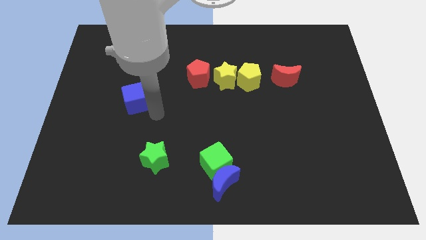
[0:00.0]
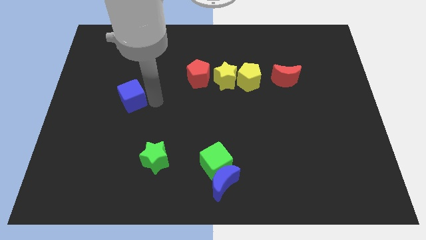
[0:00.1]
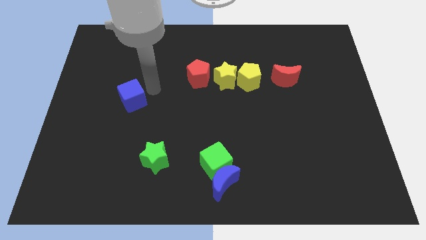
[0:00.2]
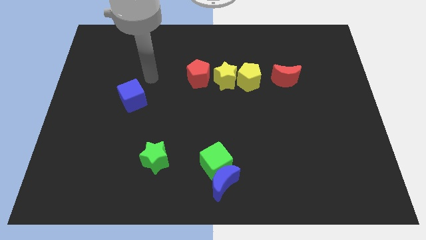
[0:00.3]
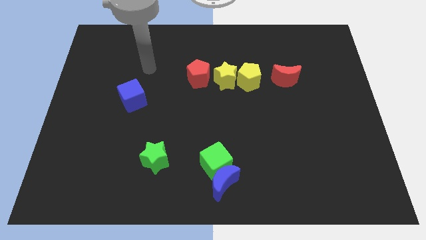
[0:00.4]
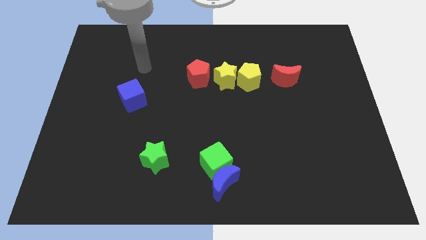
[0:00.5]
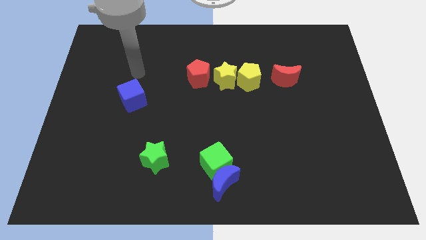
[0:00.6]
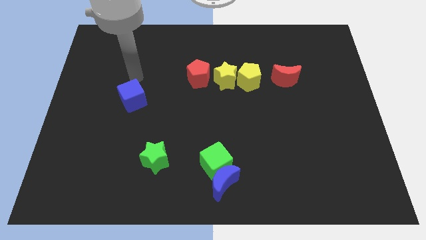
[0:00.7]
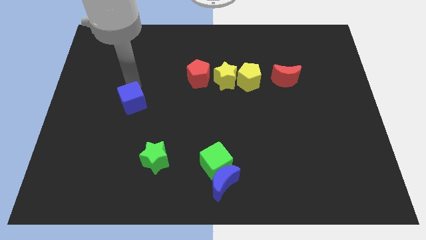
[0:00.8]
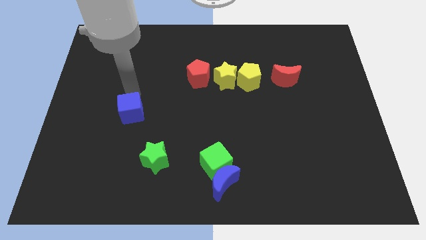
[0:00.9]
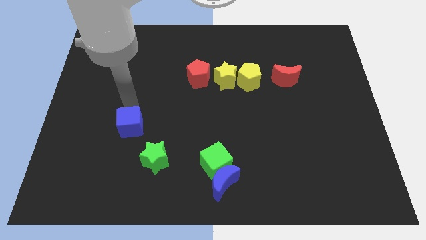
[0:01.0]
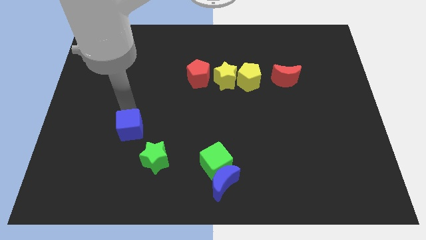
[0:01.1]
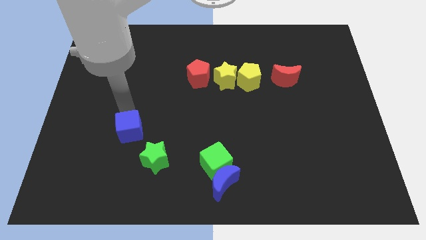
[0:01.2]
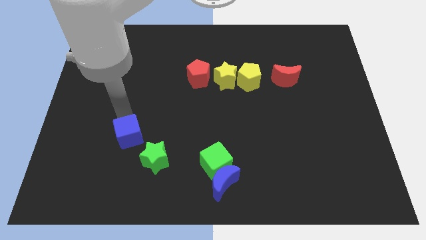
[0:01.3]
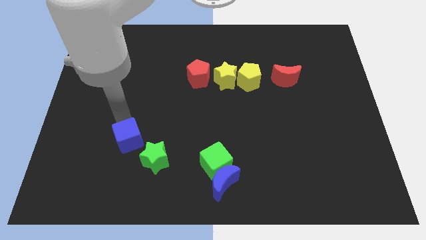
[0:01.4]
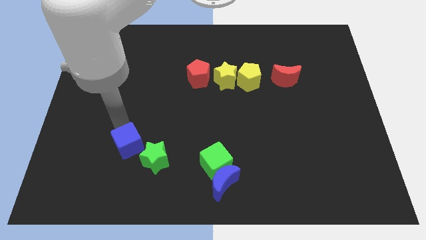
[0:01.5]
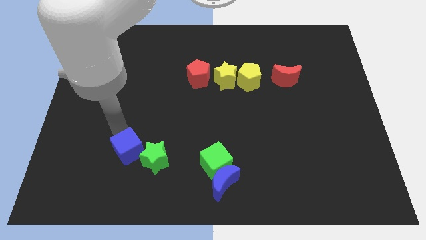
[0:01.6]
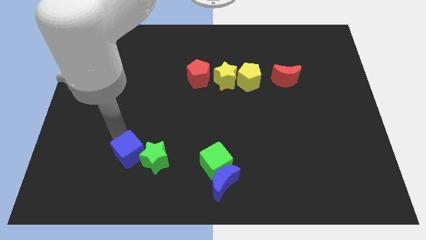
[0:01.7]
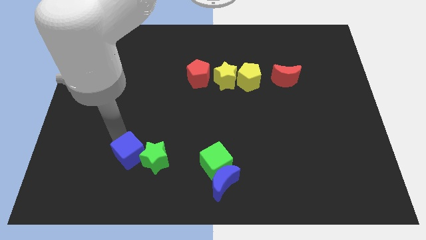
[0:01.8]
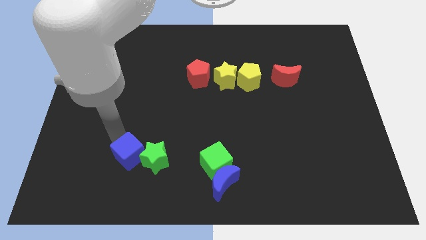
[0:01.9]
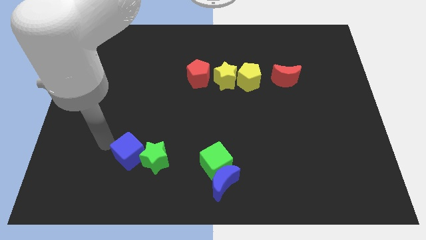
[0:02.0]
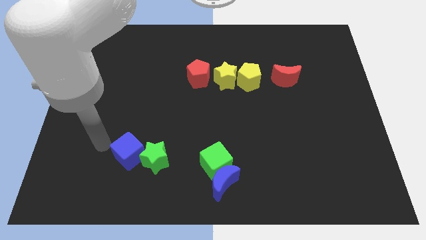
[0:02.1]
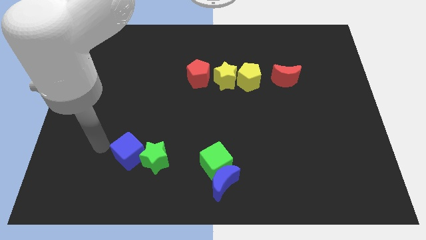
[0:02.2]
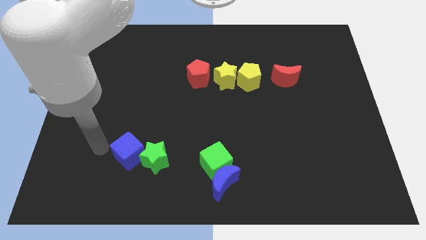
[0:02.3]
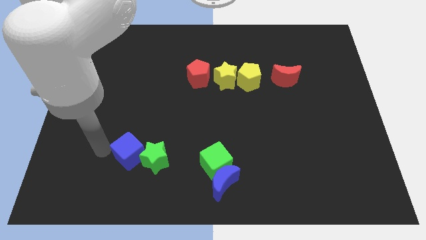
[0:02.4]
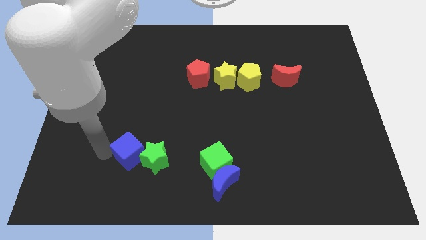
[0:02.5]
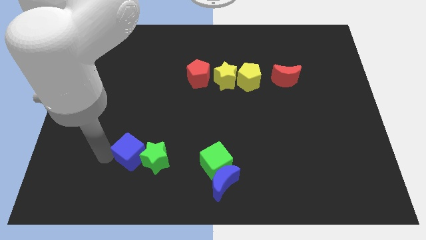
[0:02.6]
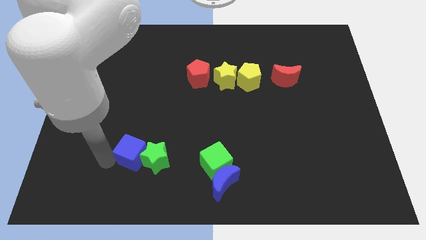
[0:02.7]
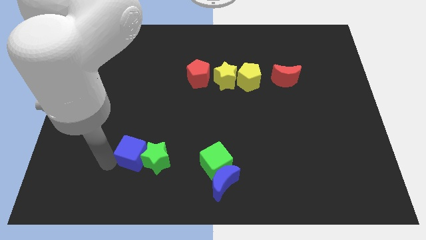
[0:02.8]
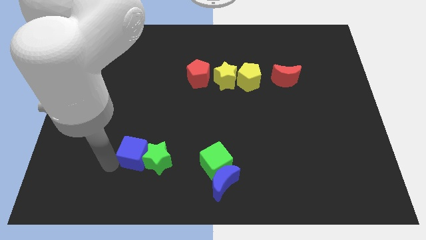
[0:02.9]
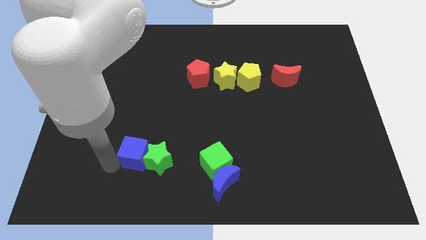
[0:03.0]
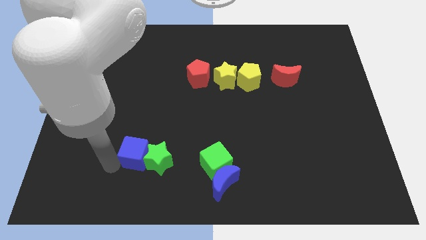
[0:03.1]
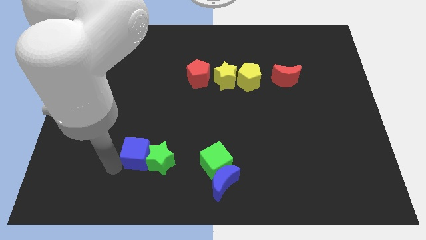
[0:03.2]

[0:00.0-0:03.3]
slide the blue cube into the green star

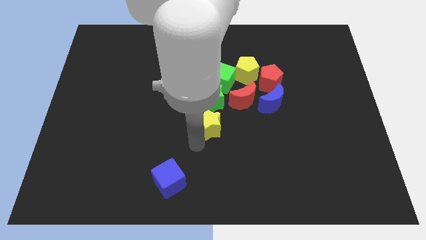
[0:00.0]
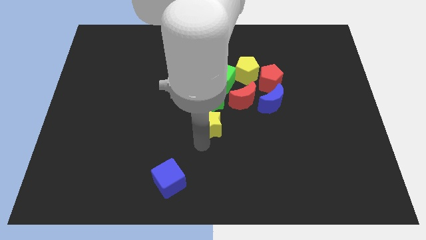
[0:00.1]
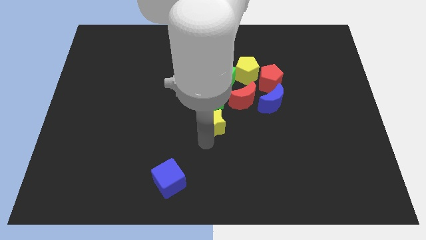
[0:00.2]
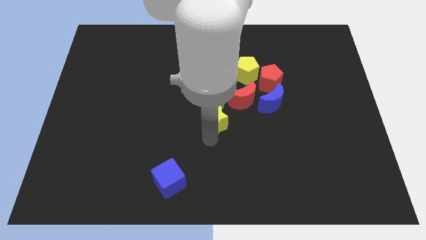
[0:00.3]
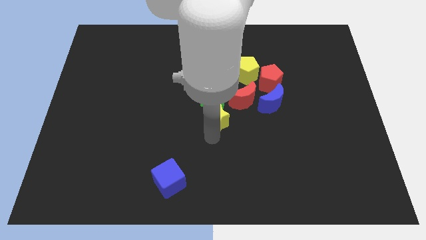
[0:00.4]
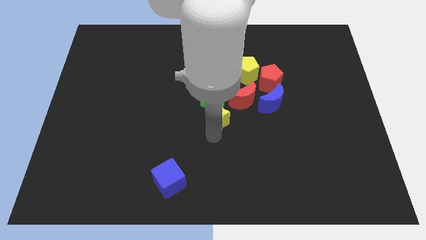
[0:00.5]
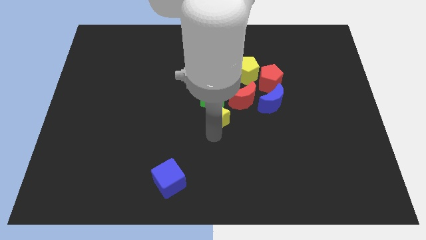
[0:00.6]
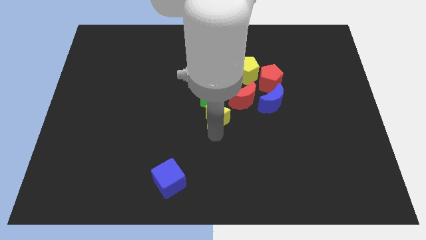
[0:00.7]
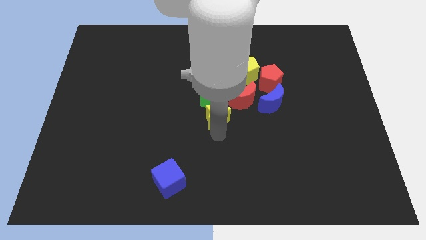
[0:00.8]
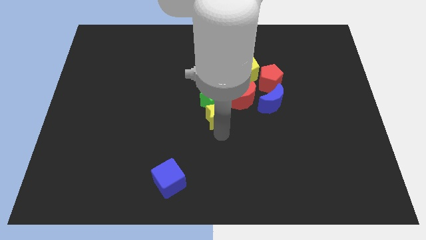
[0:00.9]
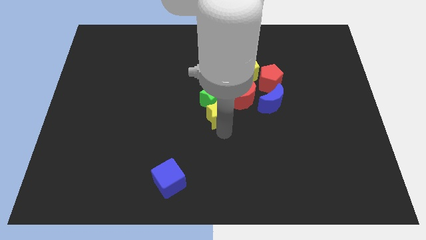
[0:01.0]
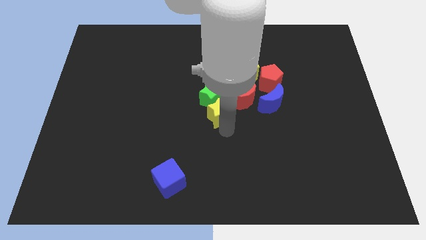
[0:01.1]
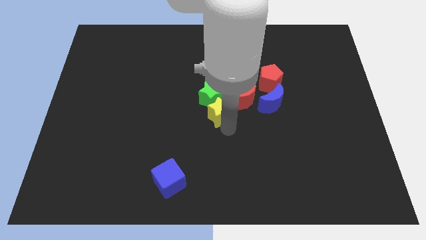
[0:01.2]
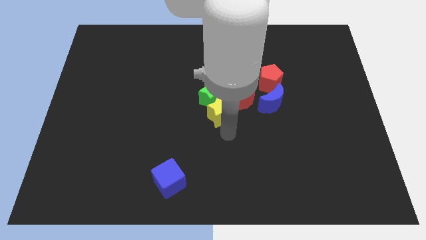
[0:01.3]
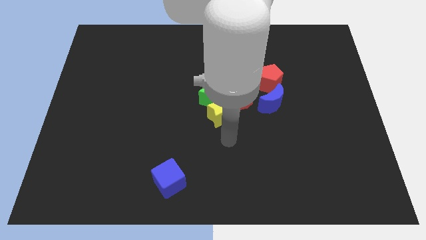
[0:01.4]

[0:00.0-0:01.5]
push the yellow star into the green star

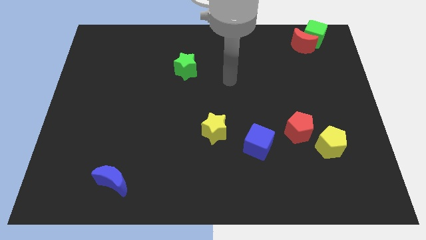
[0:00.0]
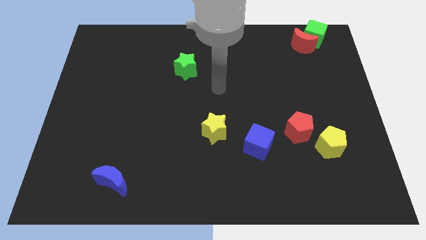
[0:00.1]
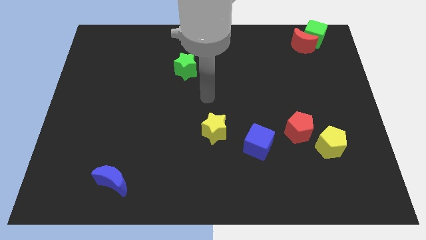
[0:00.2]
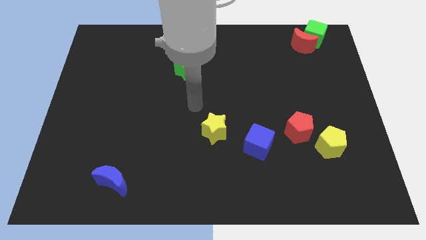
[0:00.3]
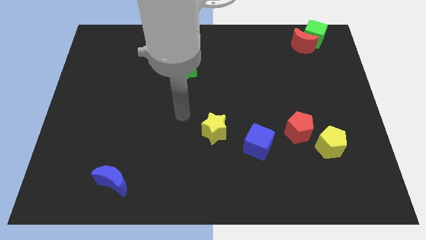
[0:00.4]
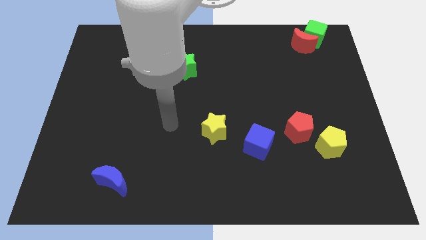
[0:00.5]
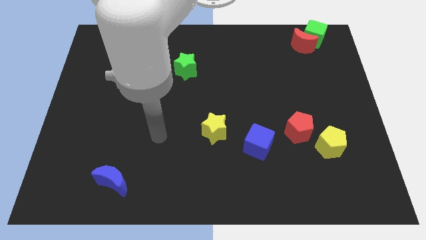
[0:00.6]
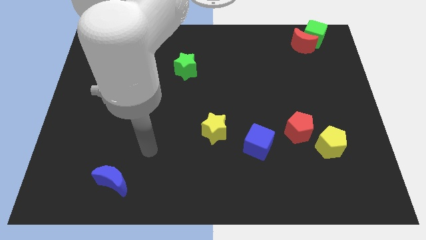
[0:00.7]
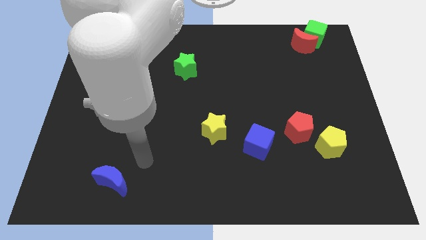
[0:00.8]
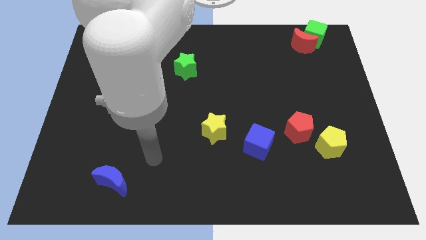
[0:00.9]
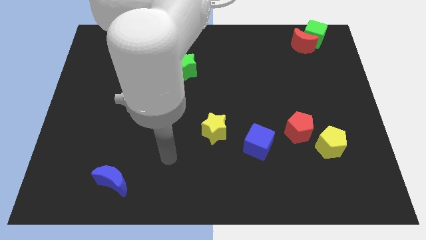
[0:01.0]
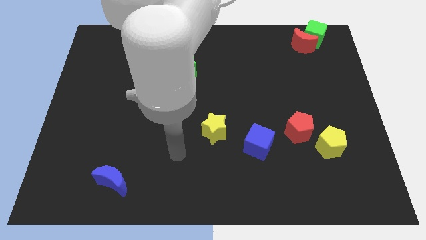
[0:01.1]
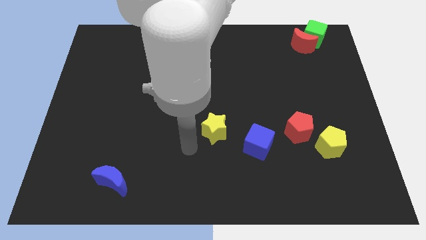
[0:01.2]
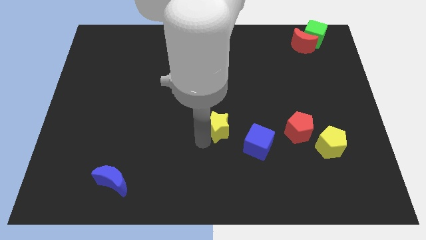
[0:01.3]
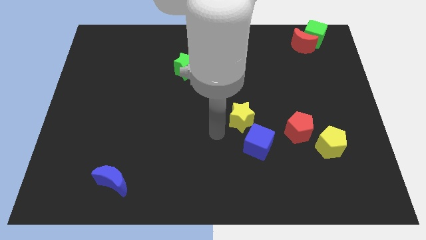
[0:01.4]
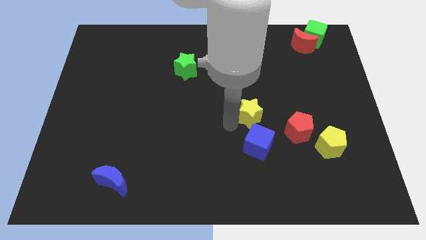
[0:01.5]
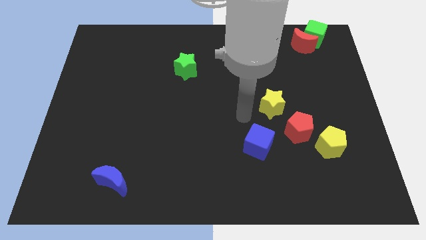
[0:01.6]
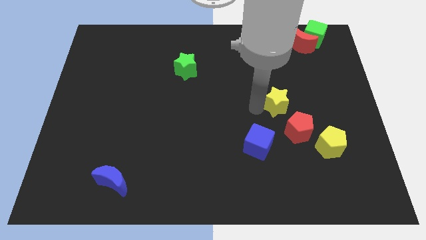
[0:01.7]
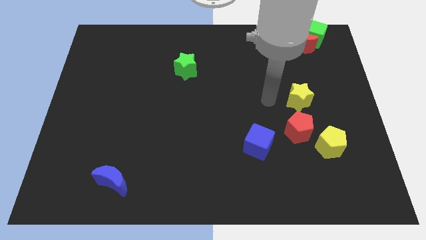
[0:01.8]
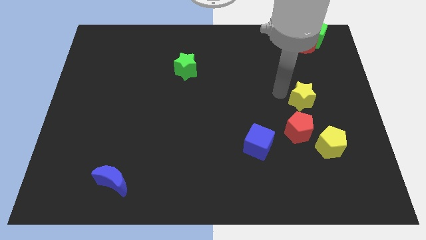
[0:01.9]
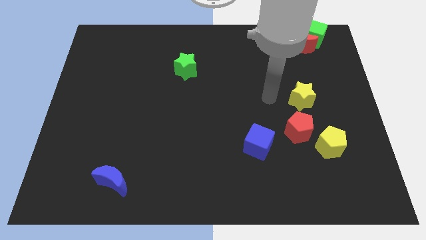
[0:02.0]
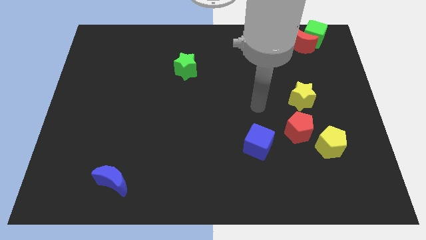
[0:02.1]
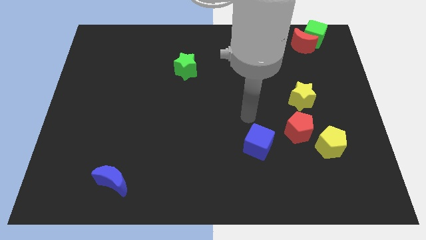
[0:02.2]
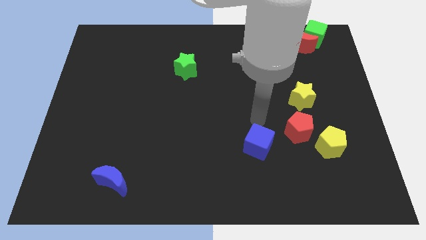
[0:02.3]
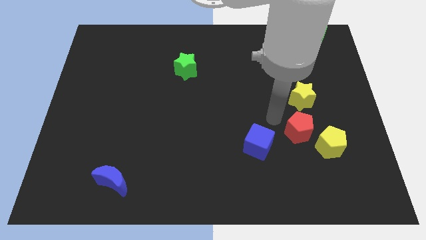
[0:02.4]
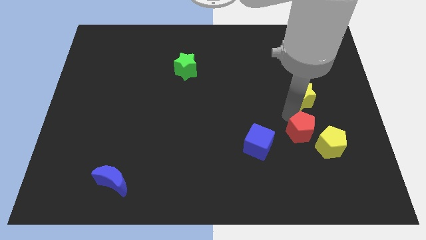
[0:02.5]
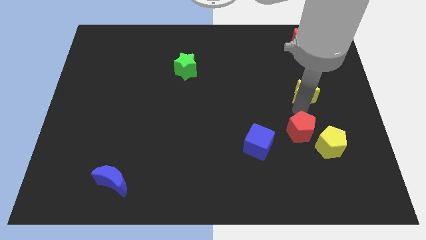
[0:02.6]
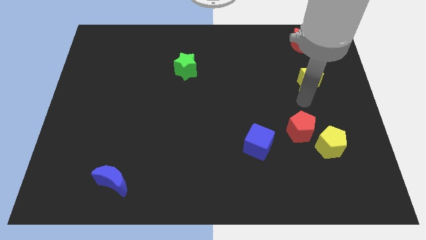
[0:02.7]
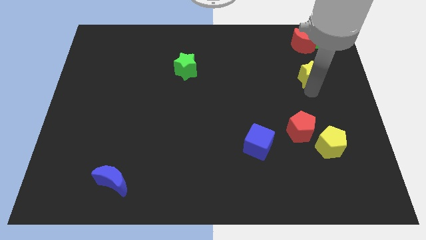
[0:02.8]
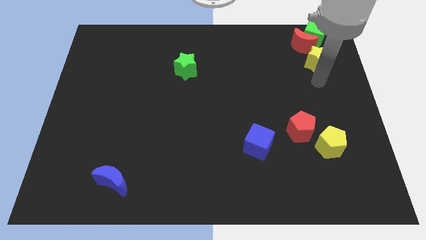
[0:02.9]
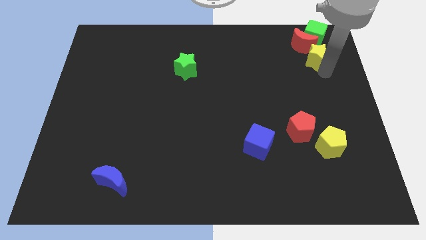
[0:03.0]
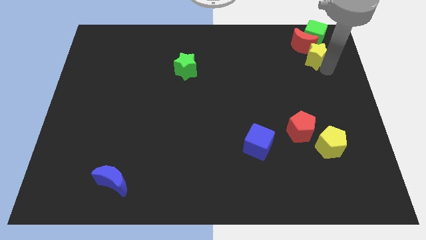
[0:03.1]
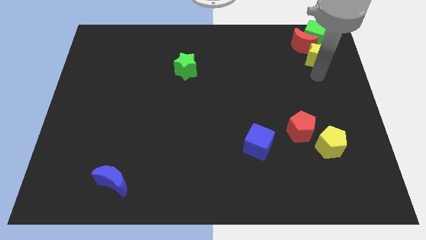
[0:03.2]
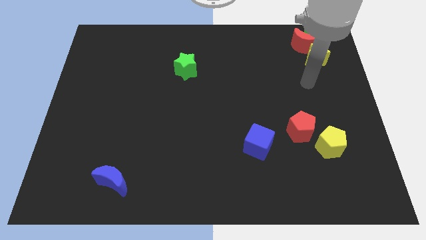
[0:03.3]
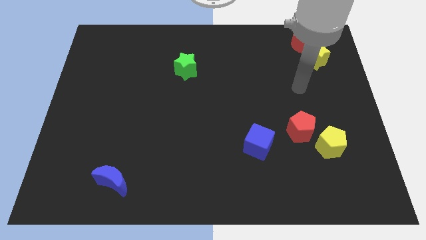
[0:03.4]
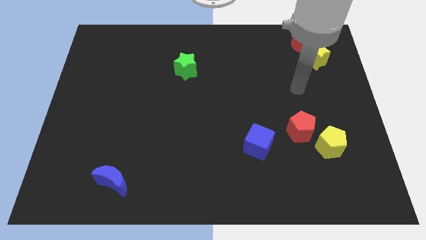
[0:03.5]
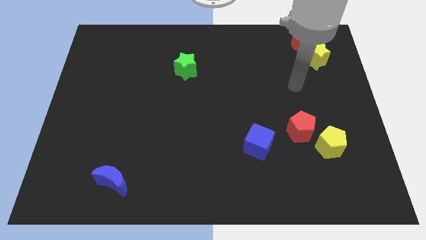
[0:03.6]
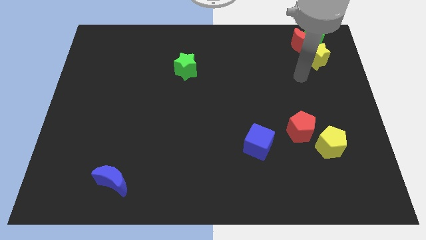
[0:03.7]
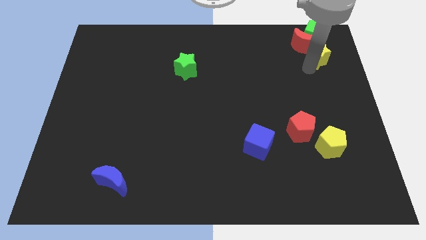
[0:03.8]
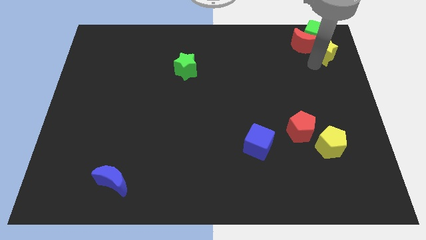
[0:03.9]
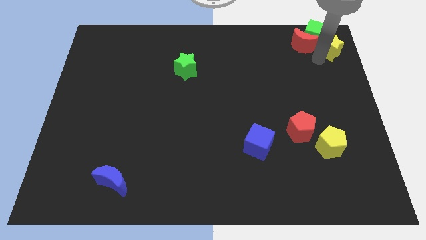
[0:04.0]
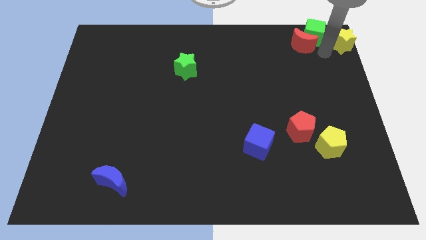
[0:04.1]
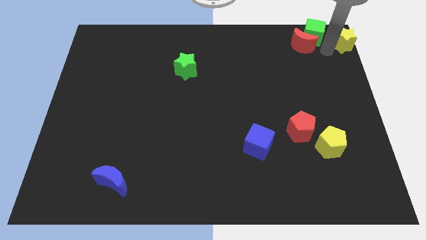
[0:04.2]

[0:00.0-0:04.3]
place the yellow star at the top right corner of the board
